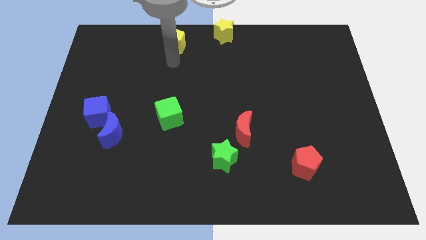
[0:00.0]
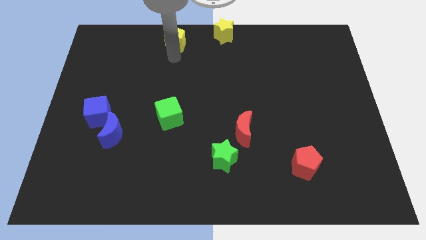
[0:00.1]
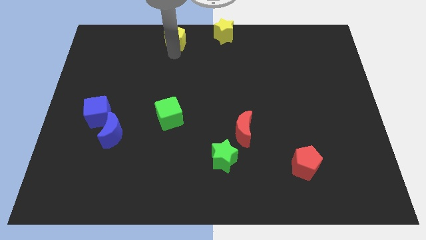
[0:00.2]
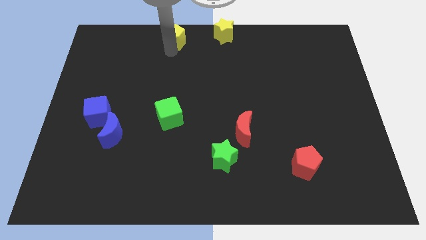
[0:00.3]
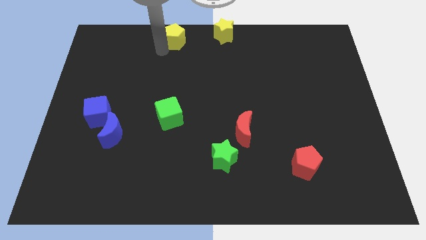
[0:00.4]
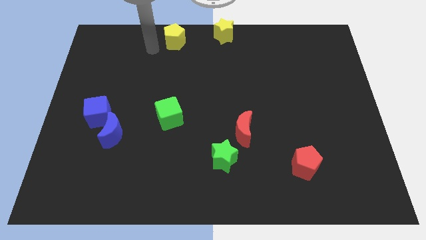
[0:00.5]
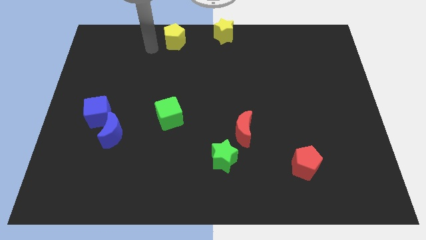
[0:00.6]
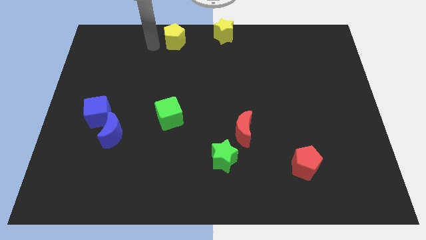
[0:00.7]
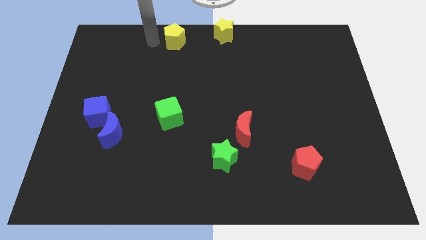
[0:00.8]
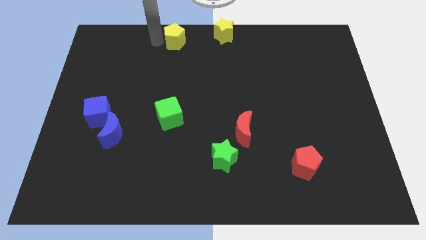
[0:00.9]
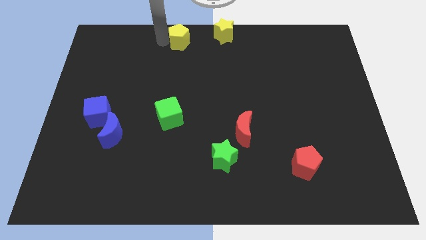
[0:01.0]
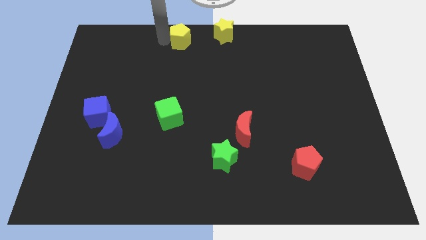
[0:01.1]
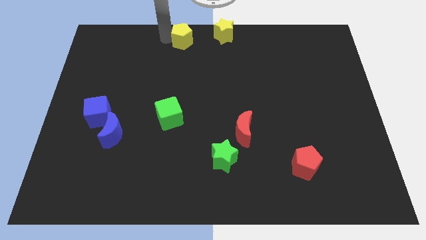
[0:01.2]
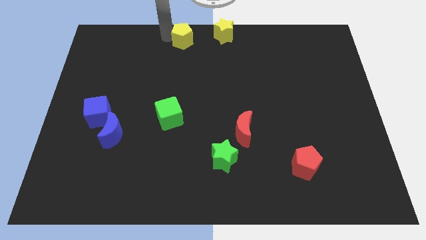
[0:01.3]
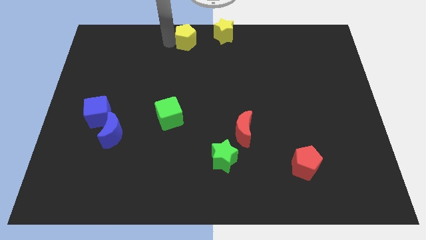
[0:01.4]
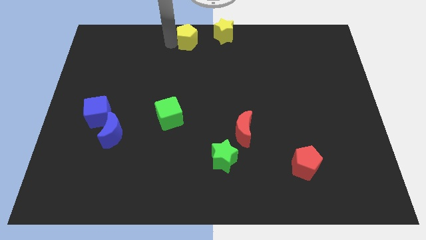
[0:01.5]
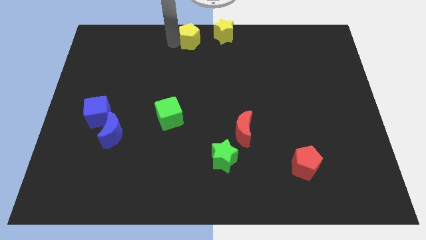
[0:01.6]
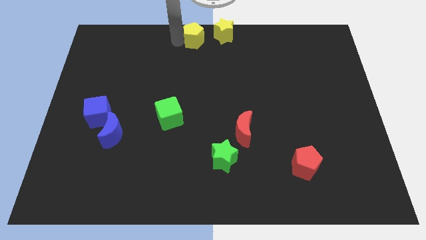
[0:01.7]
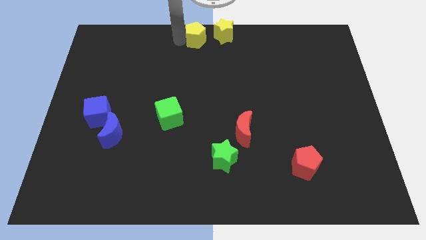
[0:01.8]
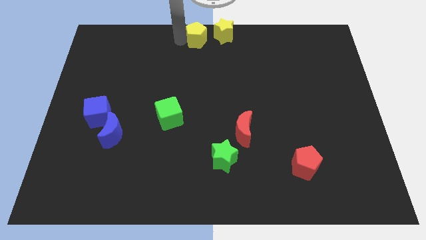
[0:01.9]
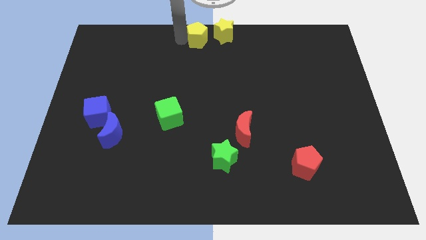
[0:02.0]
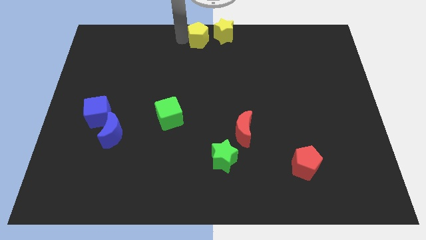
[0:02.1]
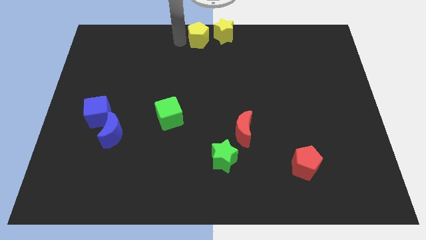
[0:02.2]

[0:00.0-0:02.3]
move yellow pentagon to the left of yellow star

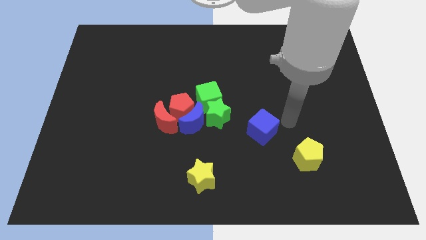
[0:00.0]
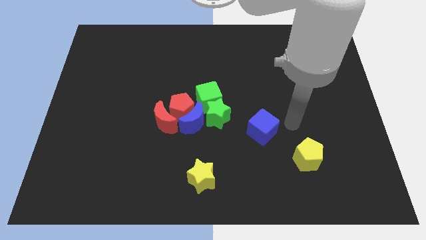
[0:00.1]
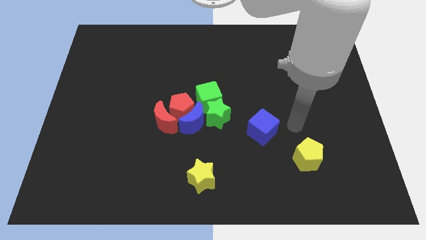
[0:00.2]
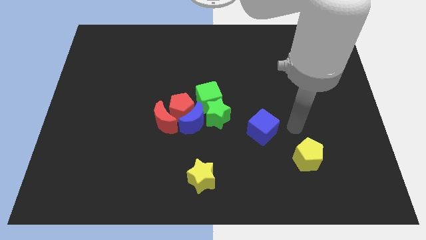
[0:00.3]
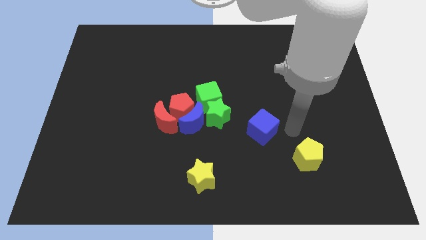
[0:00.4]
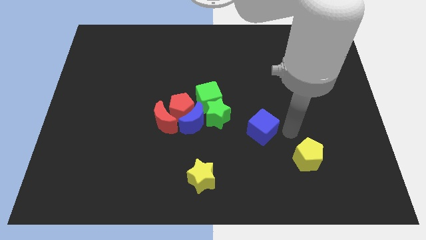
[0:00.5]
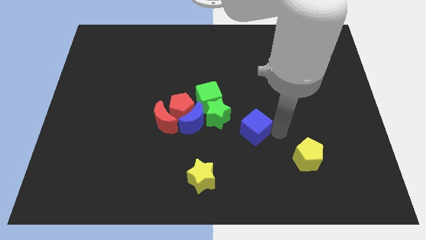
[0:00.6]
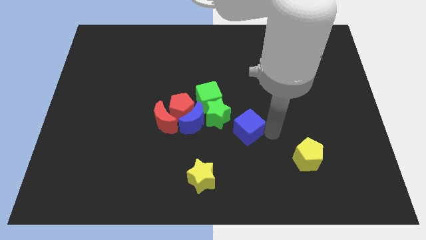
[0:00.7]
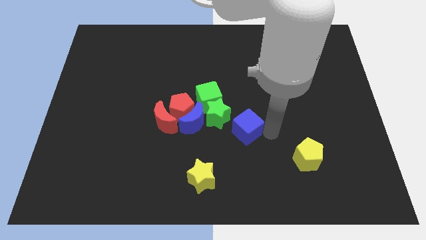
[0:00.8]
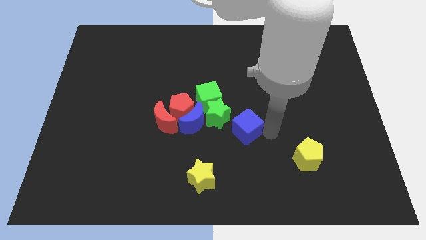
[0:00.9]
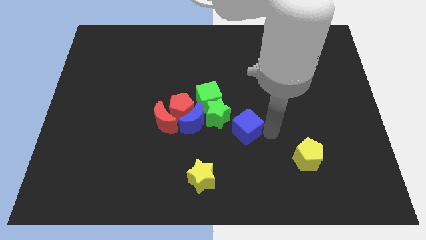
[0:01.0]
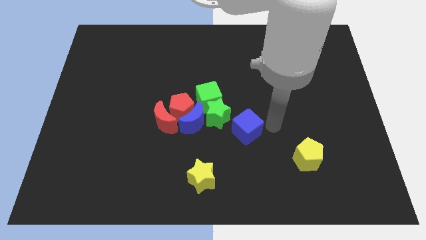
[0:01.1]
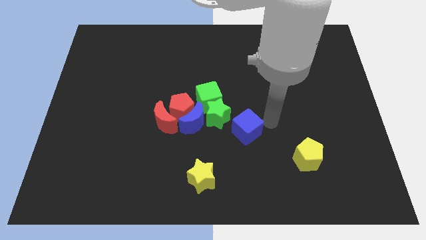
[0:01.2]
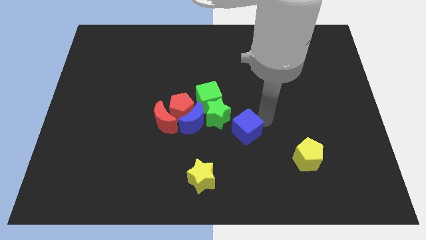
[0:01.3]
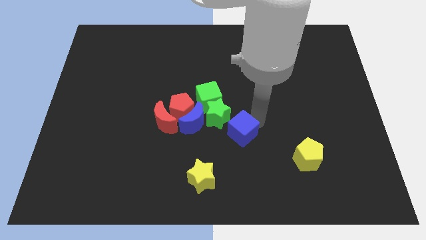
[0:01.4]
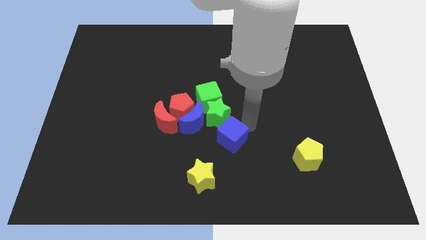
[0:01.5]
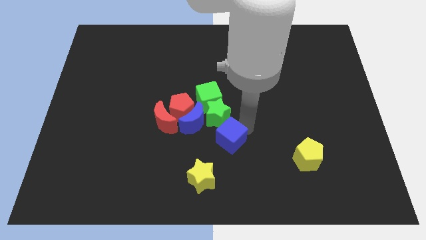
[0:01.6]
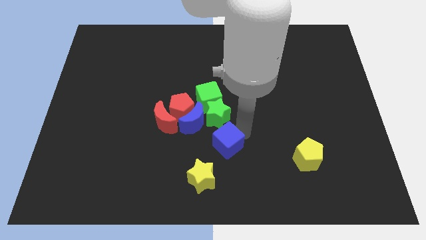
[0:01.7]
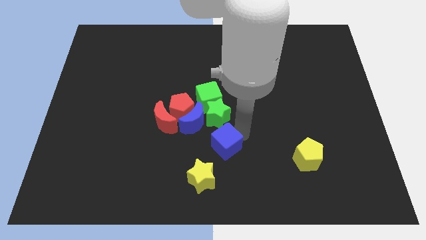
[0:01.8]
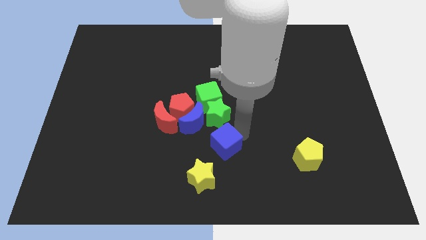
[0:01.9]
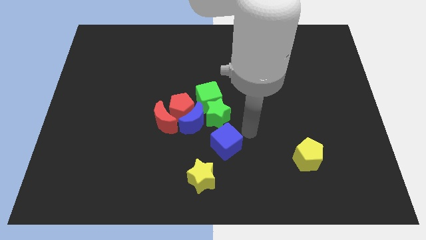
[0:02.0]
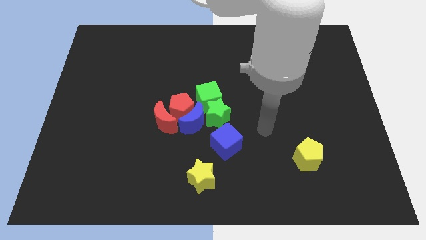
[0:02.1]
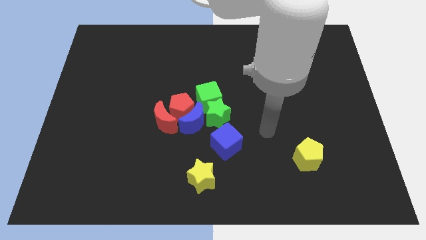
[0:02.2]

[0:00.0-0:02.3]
push the blue cube below green star

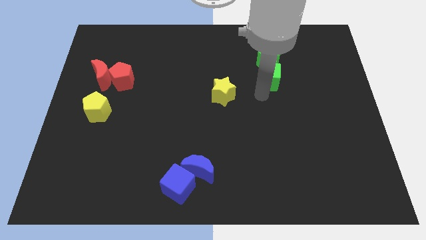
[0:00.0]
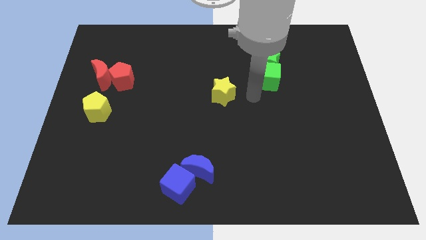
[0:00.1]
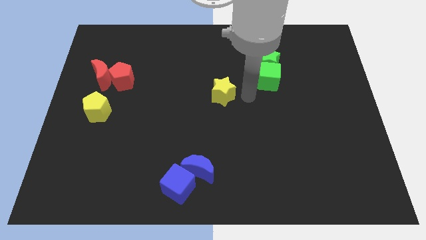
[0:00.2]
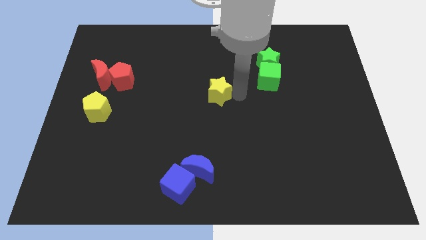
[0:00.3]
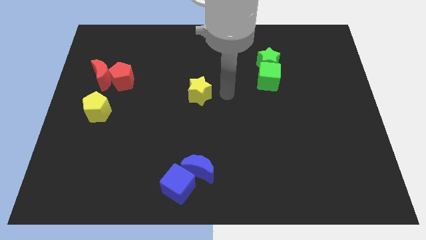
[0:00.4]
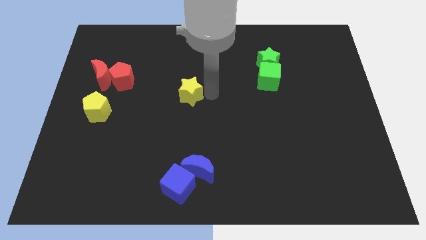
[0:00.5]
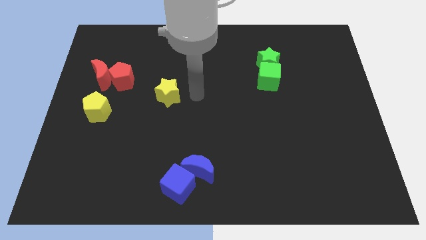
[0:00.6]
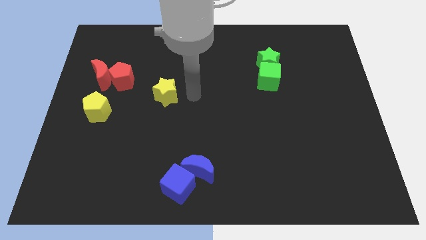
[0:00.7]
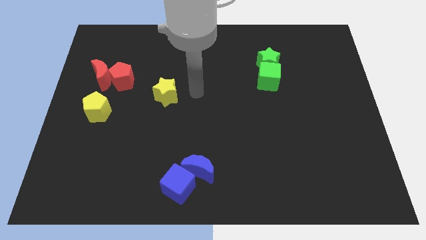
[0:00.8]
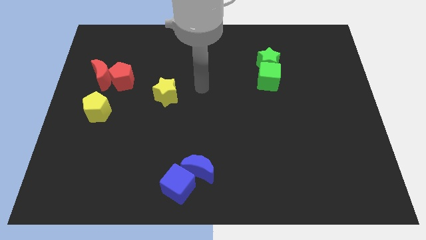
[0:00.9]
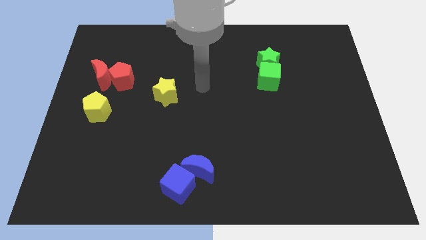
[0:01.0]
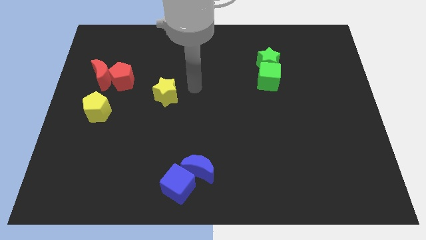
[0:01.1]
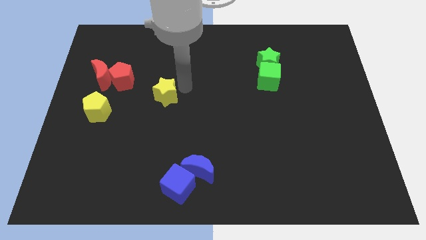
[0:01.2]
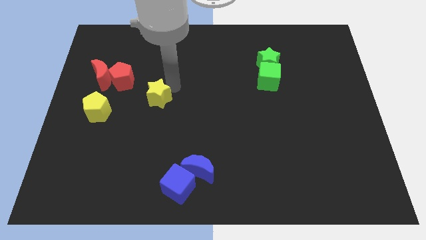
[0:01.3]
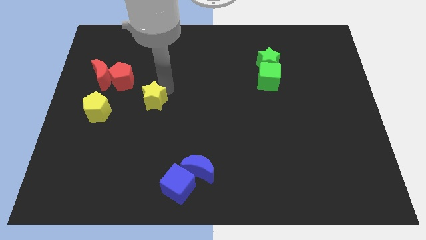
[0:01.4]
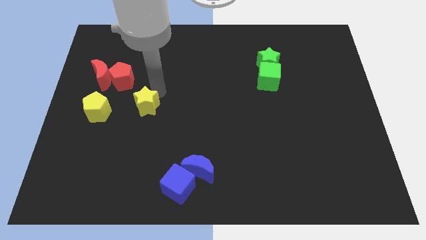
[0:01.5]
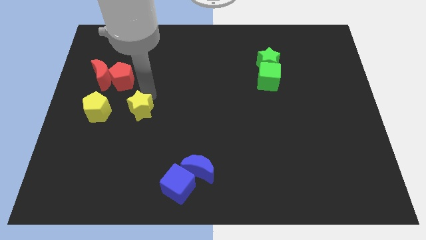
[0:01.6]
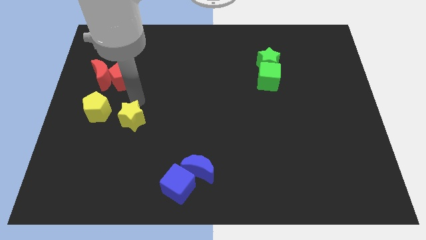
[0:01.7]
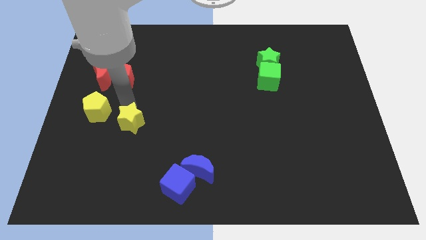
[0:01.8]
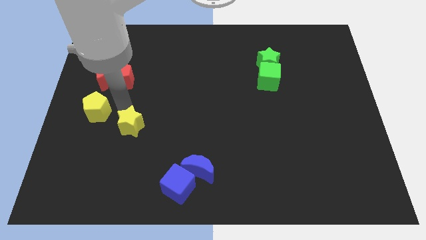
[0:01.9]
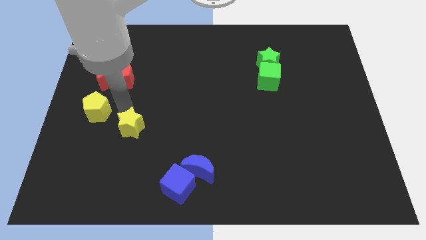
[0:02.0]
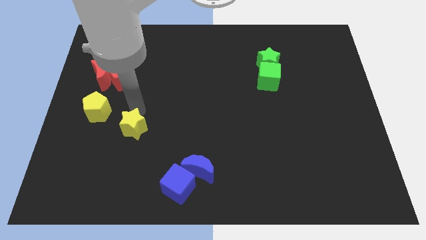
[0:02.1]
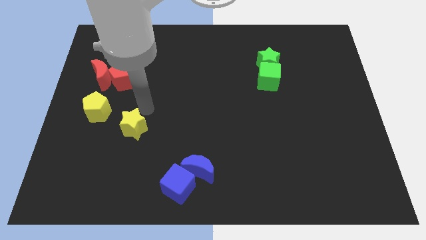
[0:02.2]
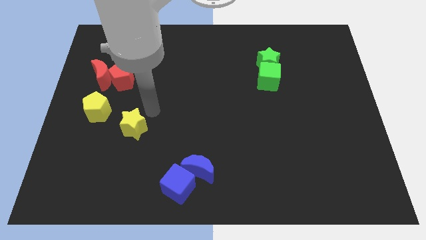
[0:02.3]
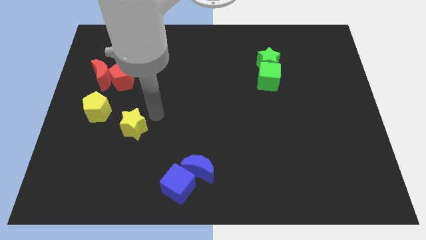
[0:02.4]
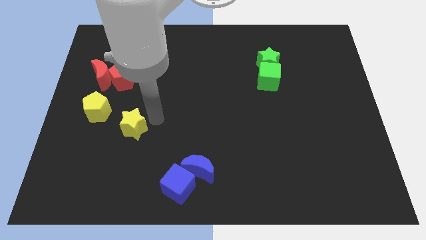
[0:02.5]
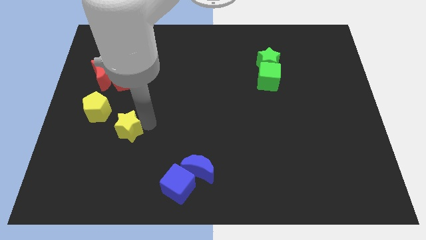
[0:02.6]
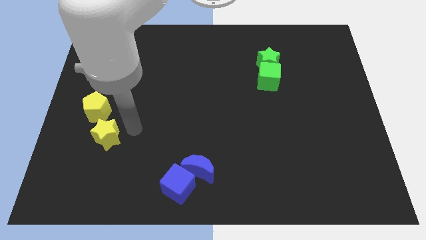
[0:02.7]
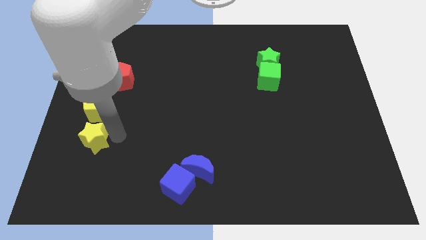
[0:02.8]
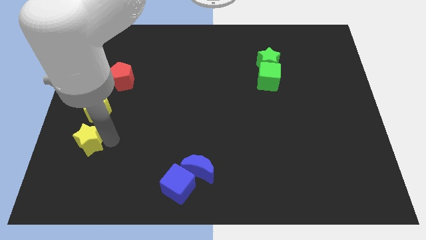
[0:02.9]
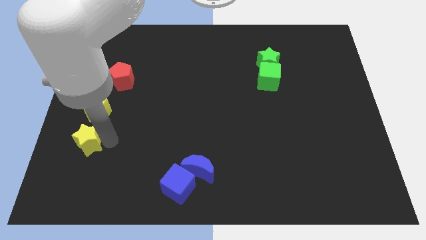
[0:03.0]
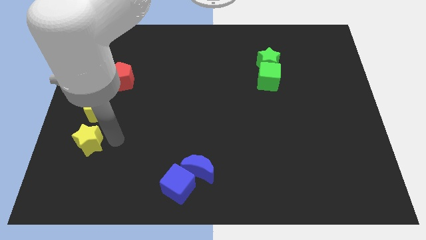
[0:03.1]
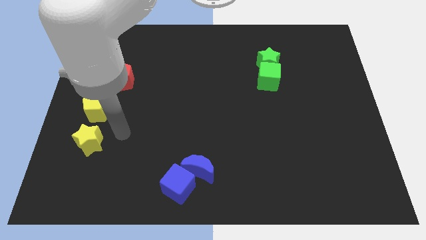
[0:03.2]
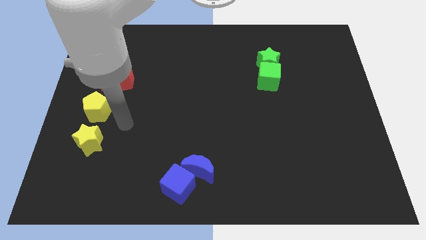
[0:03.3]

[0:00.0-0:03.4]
place the yellow star vertically below the yellow pentagon

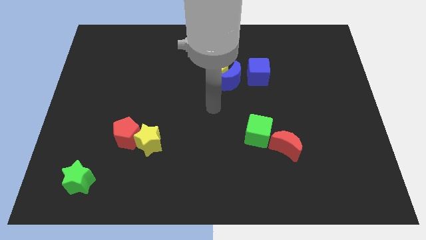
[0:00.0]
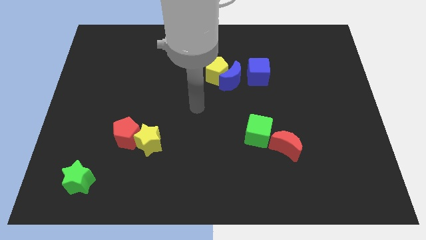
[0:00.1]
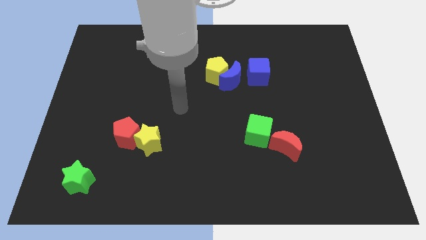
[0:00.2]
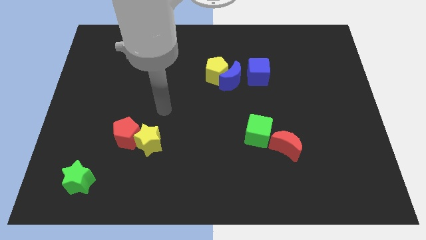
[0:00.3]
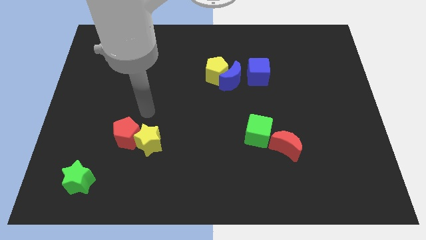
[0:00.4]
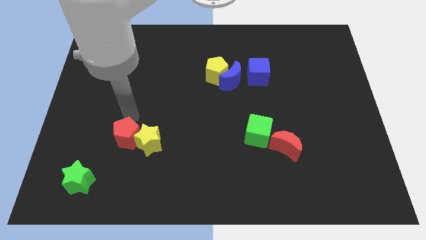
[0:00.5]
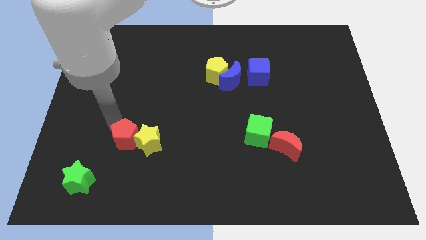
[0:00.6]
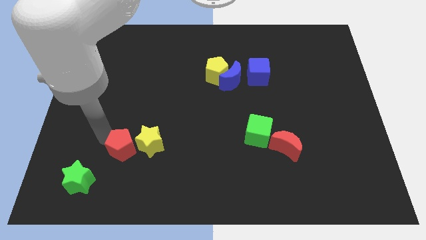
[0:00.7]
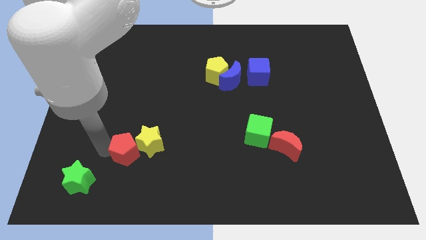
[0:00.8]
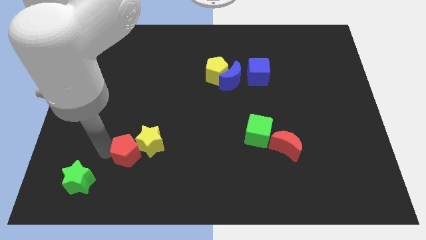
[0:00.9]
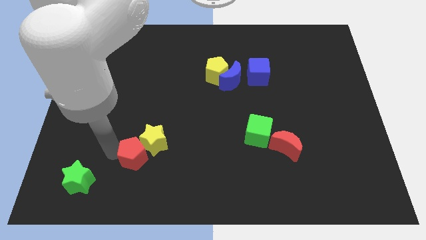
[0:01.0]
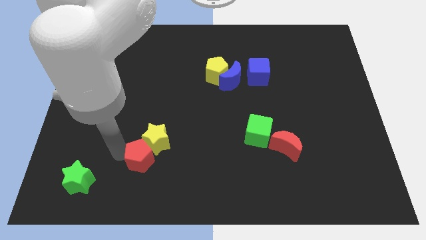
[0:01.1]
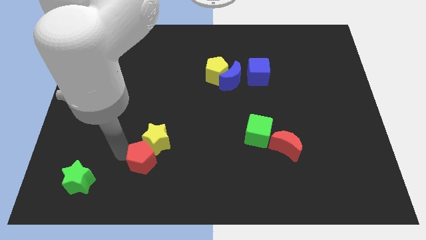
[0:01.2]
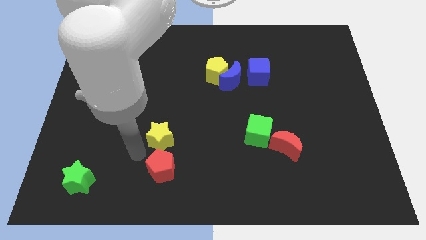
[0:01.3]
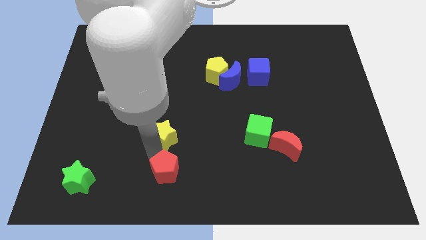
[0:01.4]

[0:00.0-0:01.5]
push the red pentagon to the bottom of yellow star
